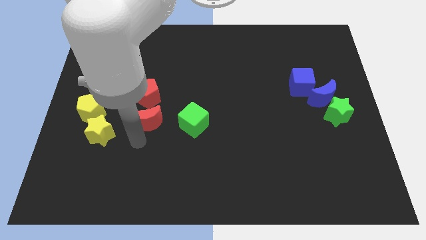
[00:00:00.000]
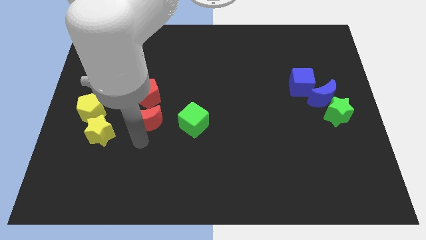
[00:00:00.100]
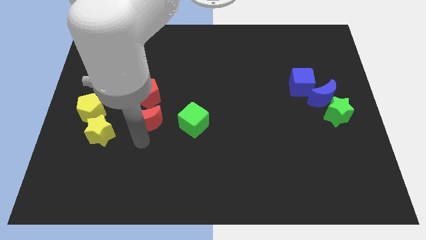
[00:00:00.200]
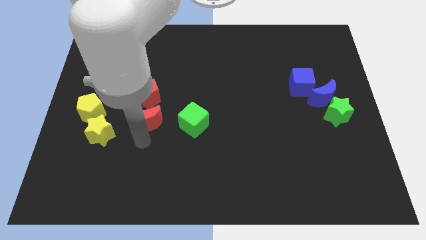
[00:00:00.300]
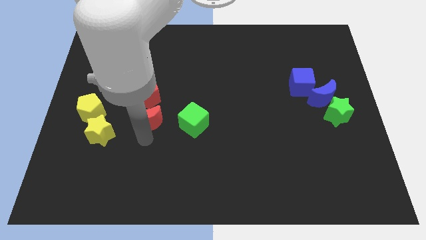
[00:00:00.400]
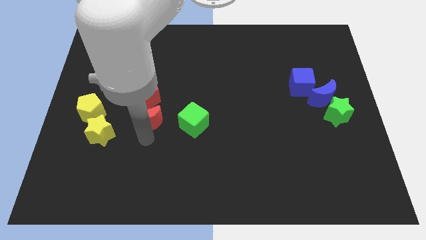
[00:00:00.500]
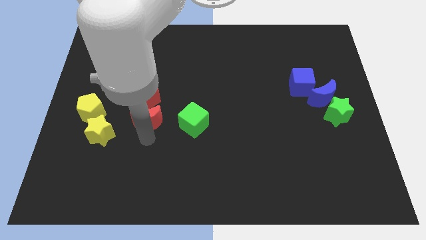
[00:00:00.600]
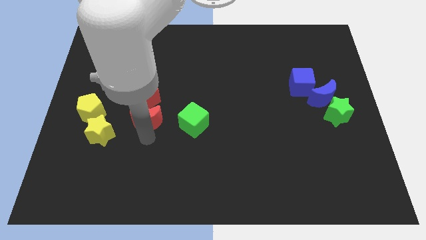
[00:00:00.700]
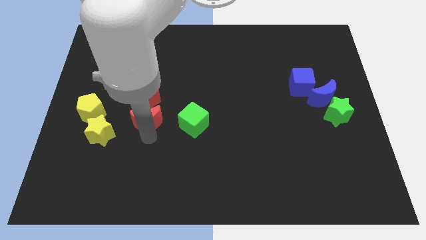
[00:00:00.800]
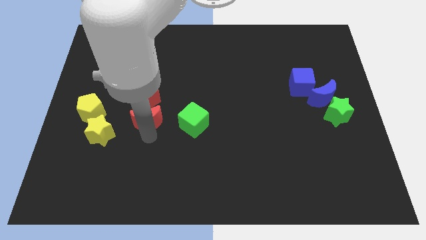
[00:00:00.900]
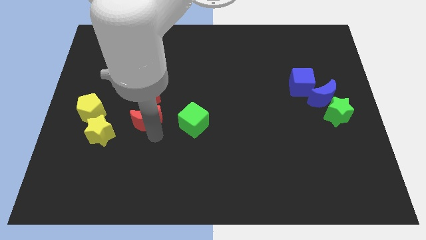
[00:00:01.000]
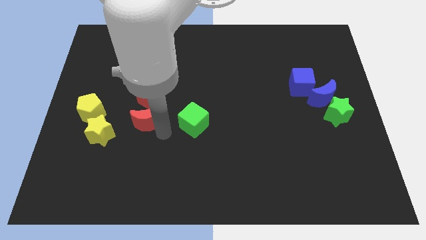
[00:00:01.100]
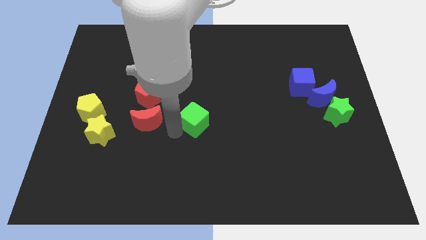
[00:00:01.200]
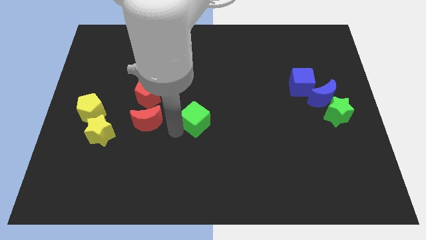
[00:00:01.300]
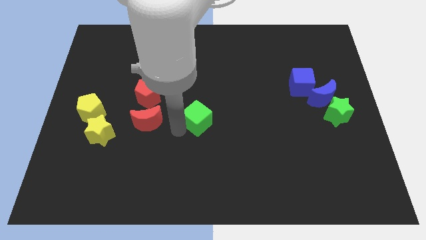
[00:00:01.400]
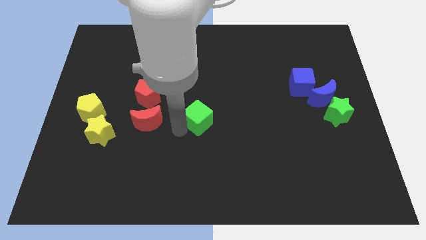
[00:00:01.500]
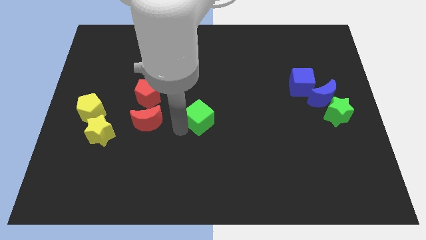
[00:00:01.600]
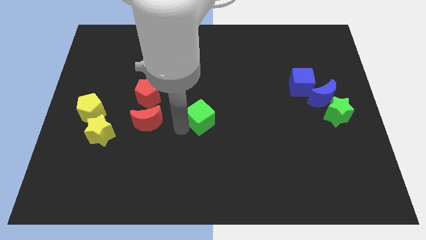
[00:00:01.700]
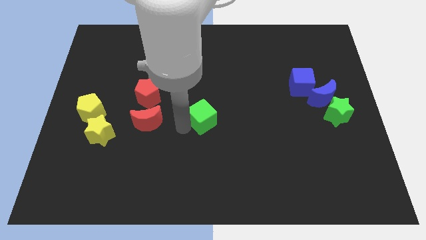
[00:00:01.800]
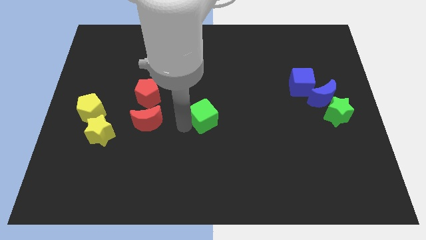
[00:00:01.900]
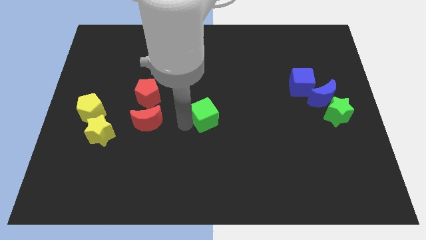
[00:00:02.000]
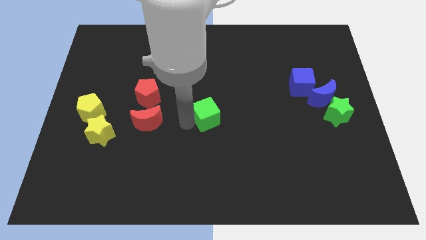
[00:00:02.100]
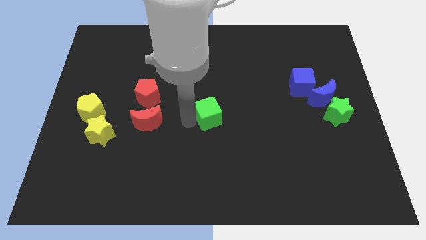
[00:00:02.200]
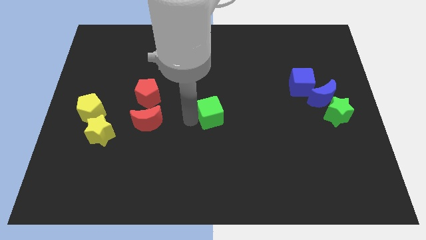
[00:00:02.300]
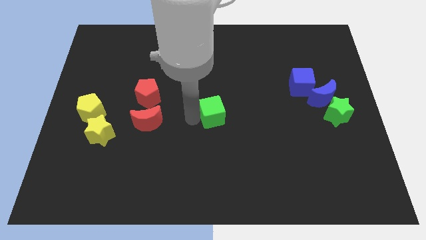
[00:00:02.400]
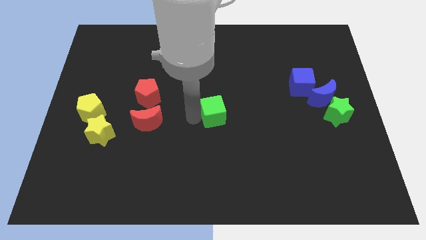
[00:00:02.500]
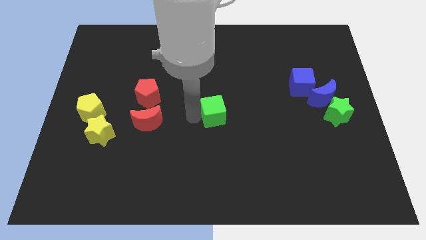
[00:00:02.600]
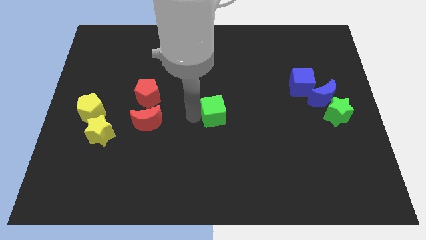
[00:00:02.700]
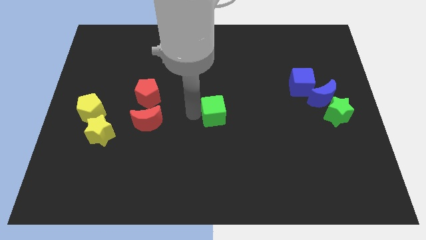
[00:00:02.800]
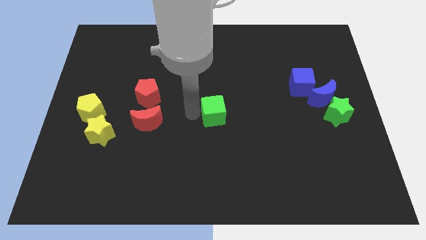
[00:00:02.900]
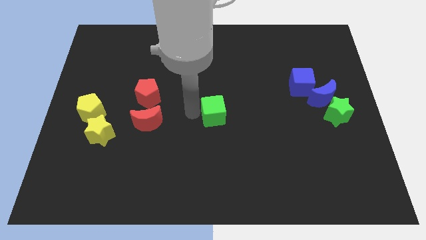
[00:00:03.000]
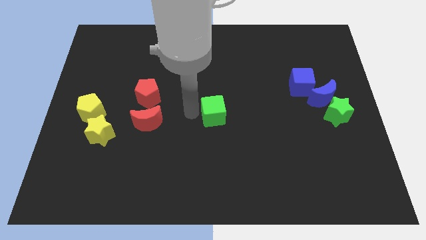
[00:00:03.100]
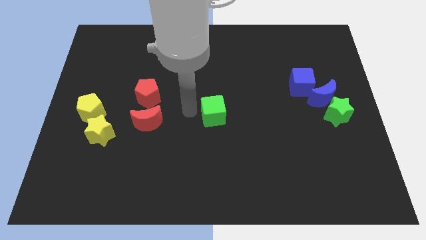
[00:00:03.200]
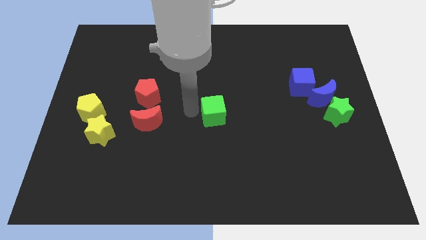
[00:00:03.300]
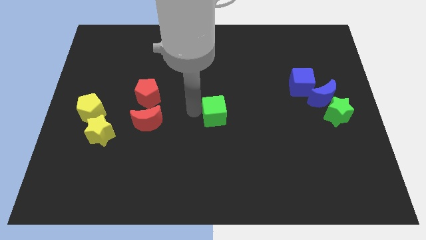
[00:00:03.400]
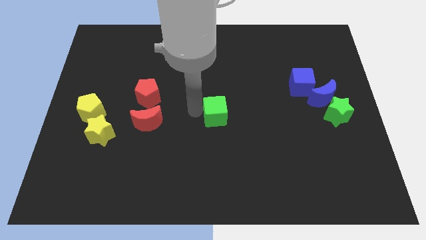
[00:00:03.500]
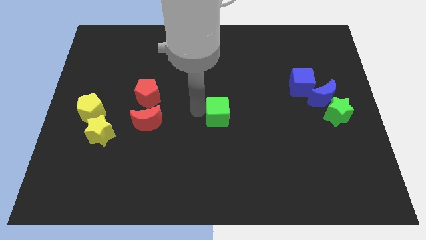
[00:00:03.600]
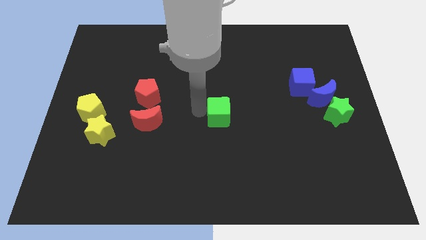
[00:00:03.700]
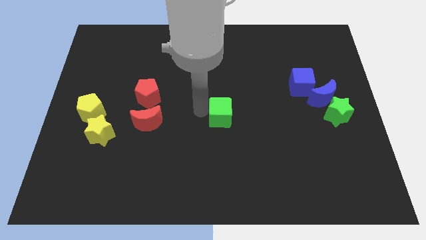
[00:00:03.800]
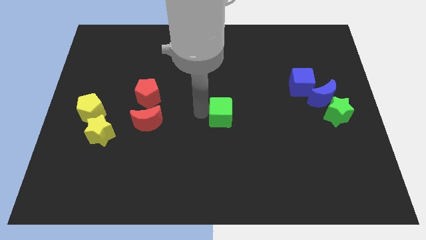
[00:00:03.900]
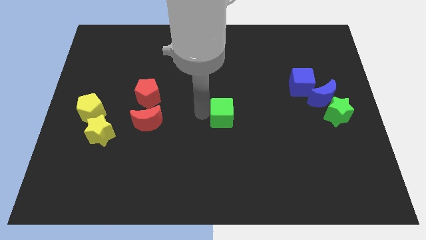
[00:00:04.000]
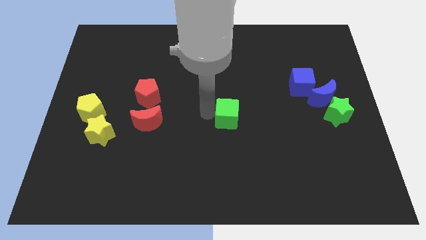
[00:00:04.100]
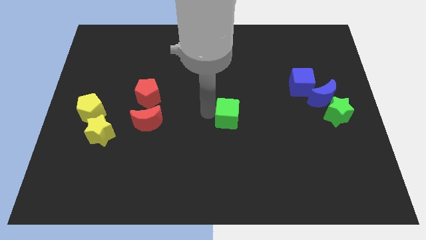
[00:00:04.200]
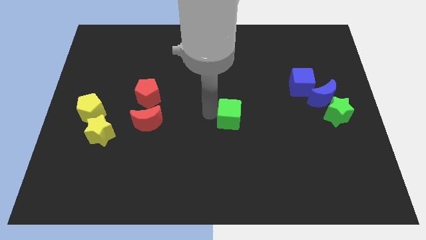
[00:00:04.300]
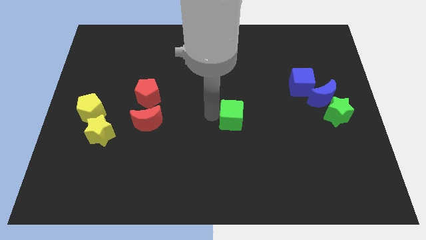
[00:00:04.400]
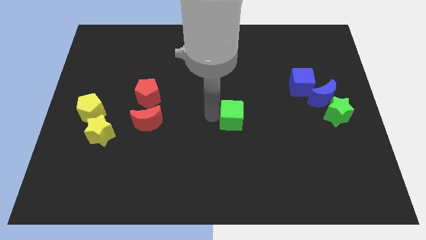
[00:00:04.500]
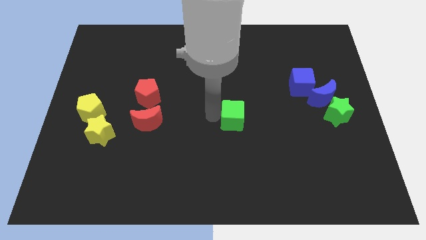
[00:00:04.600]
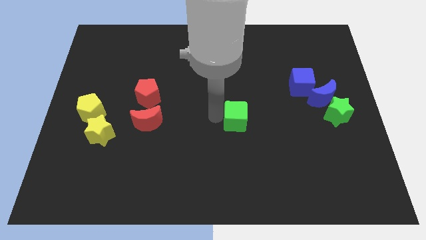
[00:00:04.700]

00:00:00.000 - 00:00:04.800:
slide the green cube to the right side of the table

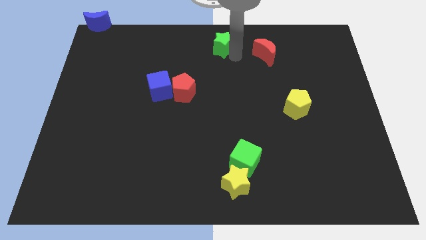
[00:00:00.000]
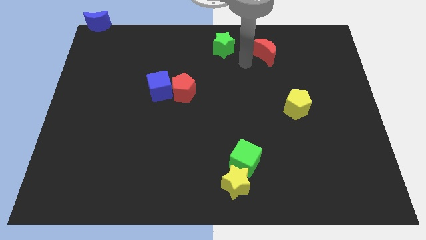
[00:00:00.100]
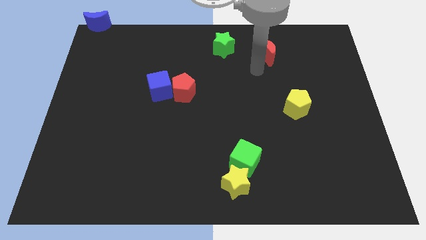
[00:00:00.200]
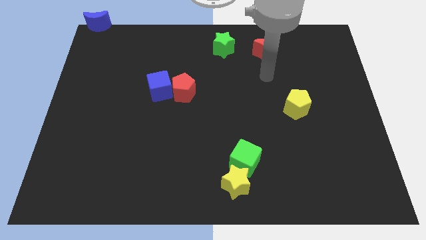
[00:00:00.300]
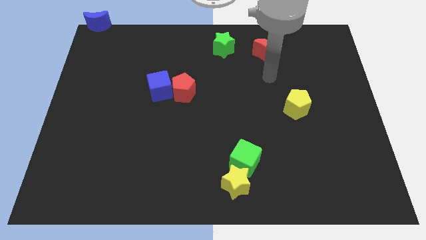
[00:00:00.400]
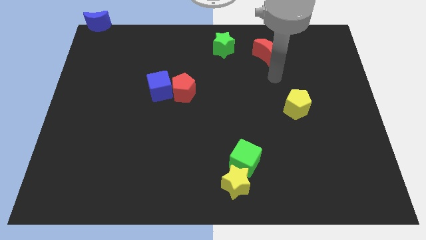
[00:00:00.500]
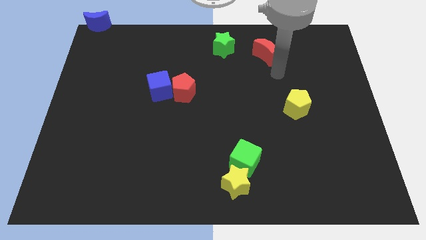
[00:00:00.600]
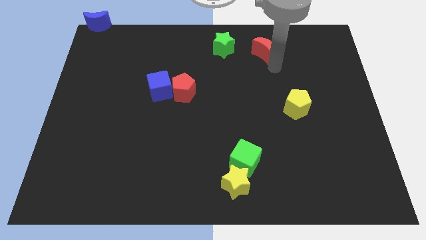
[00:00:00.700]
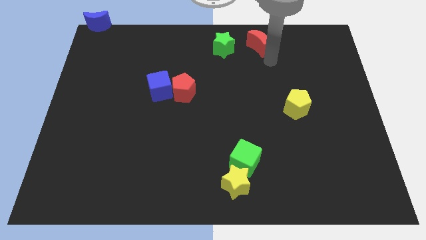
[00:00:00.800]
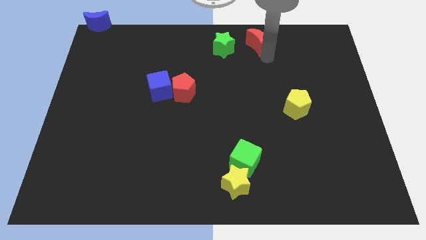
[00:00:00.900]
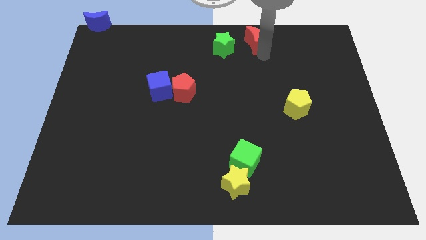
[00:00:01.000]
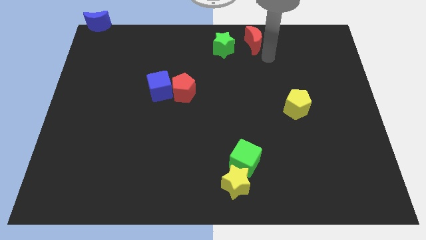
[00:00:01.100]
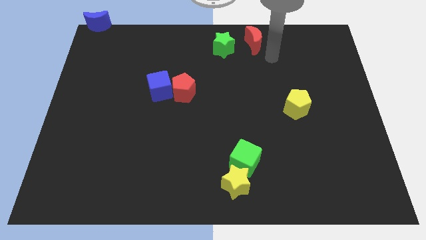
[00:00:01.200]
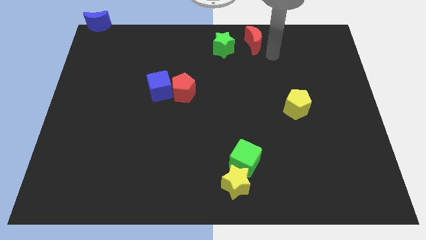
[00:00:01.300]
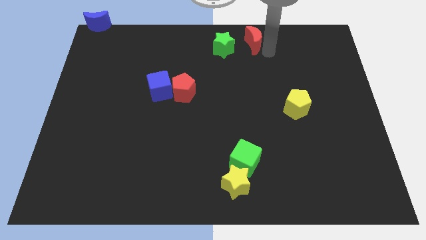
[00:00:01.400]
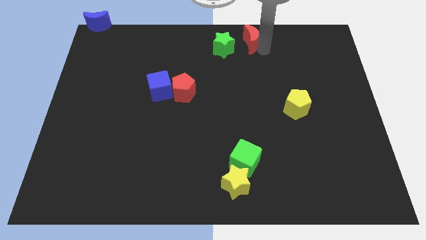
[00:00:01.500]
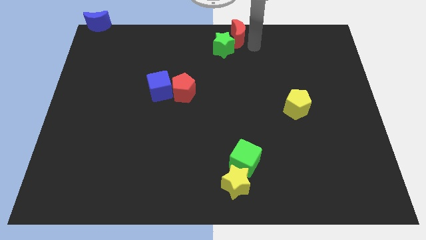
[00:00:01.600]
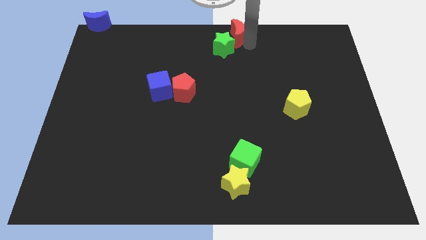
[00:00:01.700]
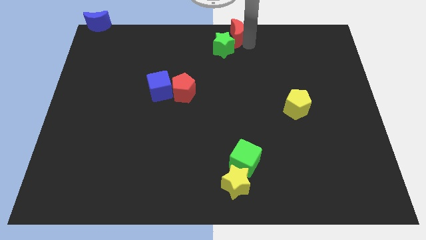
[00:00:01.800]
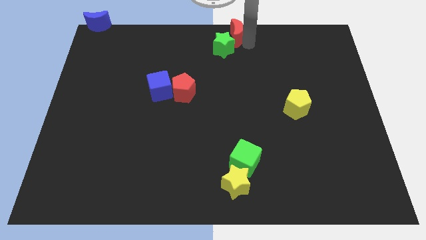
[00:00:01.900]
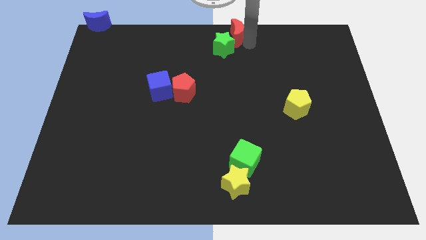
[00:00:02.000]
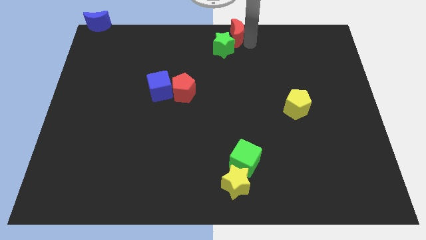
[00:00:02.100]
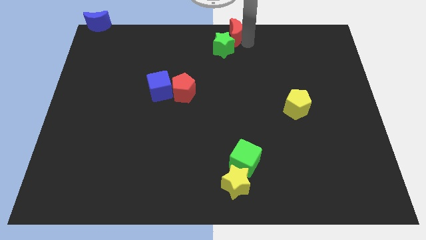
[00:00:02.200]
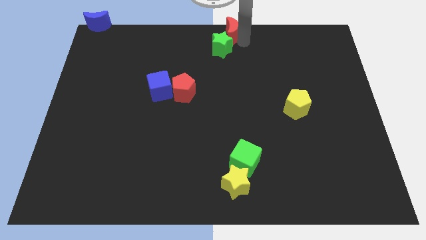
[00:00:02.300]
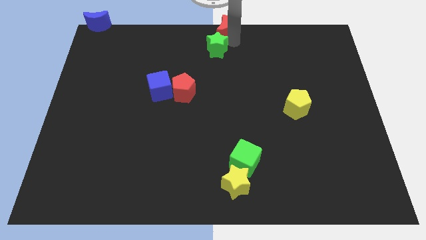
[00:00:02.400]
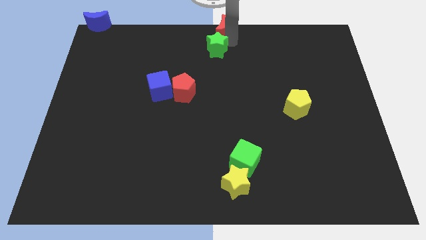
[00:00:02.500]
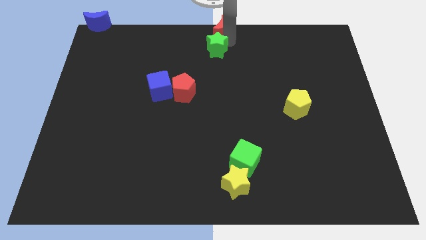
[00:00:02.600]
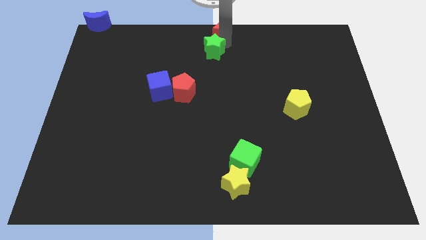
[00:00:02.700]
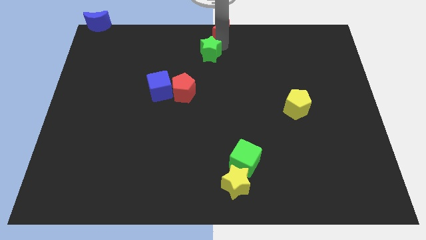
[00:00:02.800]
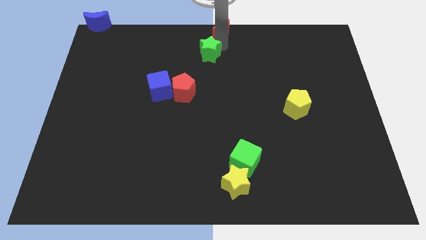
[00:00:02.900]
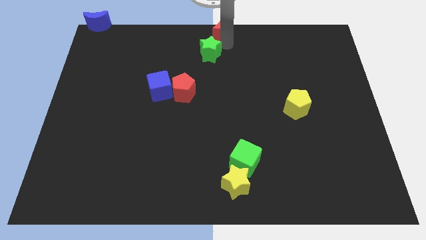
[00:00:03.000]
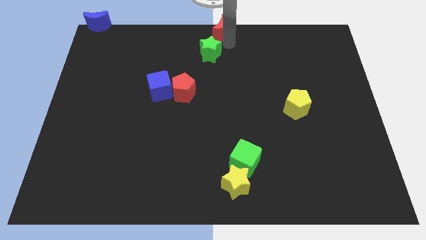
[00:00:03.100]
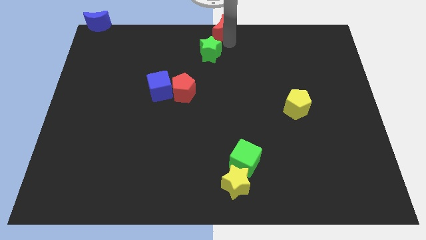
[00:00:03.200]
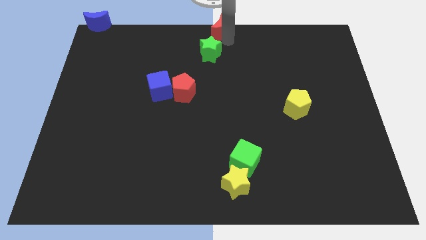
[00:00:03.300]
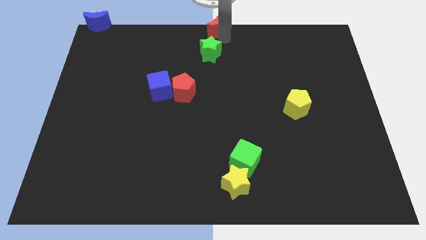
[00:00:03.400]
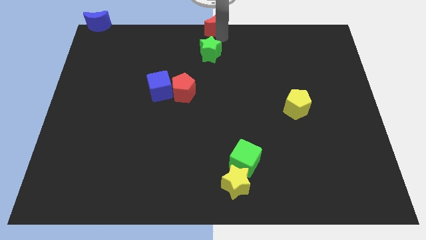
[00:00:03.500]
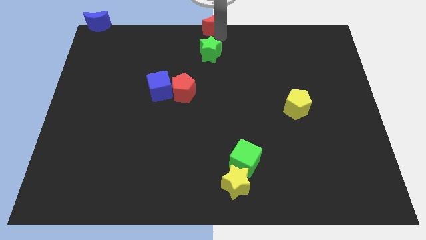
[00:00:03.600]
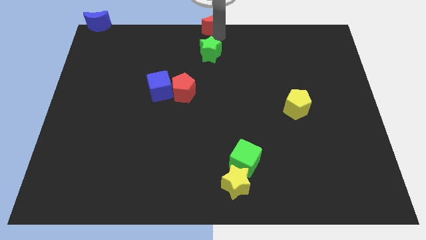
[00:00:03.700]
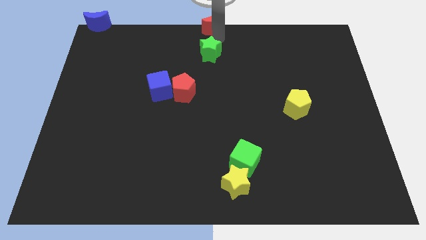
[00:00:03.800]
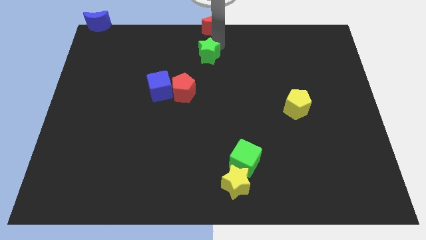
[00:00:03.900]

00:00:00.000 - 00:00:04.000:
move the red moon to the top center of the board
